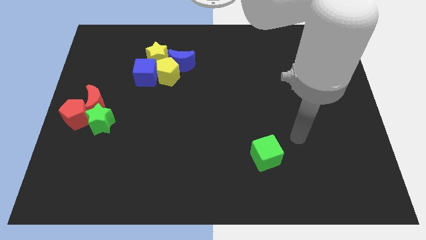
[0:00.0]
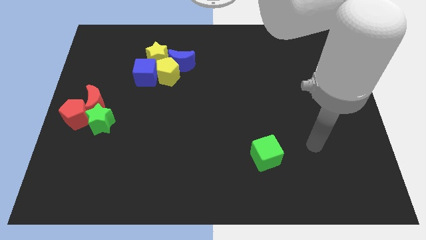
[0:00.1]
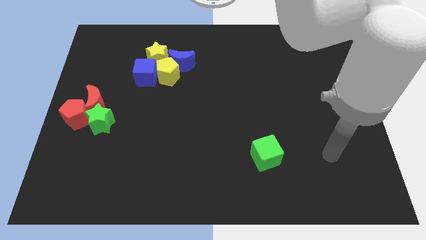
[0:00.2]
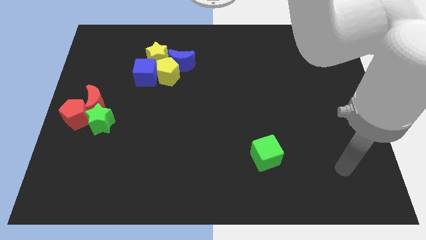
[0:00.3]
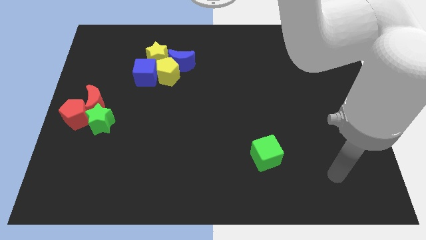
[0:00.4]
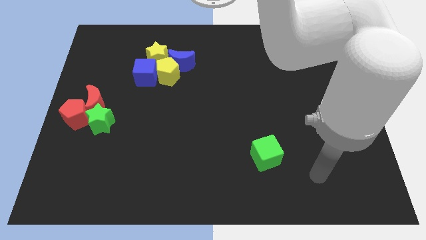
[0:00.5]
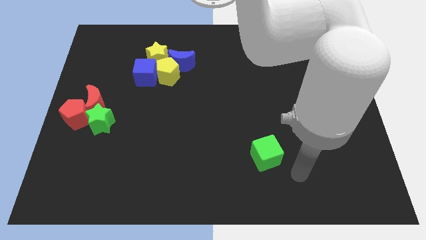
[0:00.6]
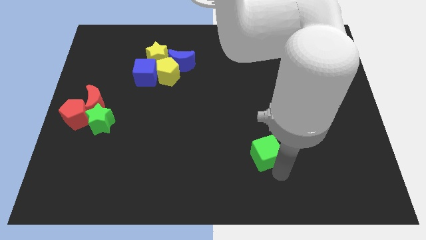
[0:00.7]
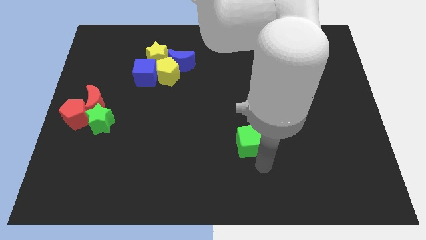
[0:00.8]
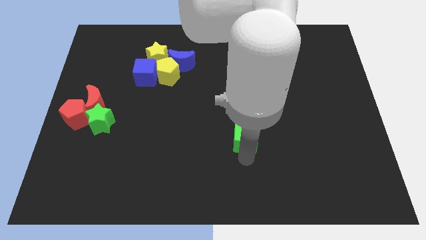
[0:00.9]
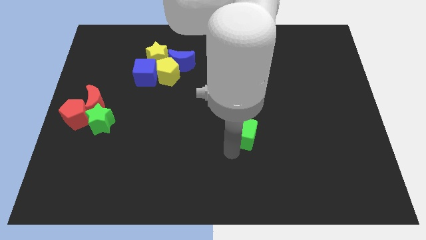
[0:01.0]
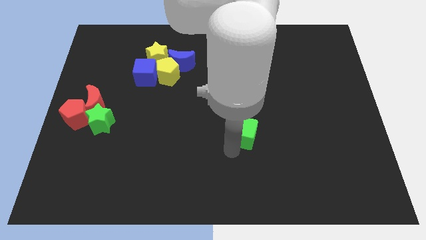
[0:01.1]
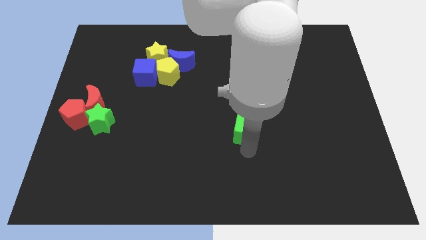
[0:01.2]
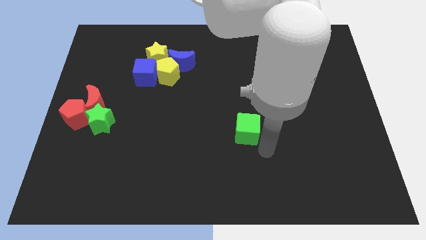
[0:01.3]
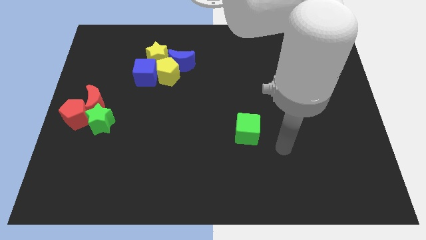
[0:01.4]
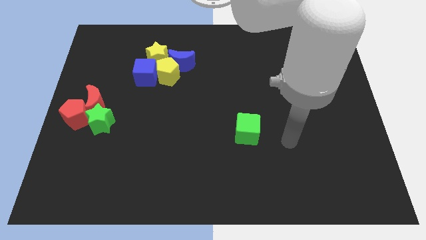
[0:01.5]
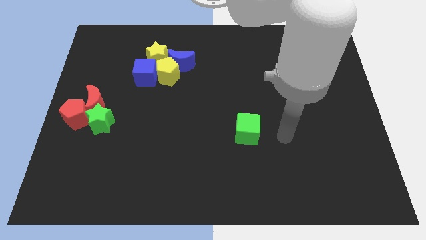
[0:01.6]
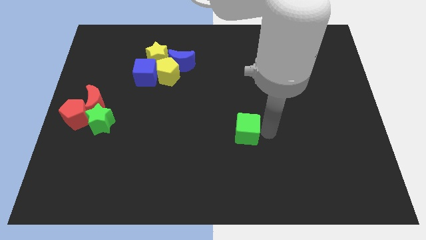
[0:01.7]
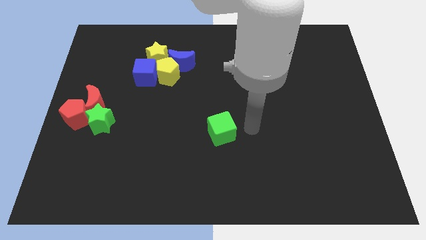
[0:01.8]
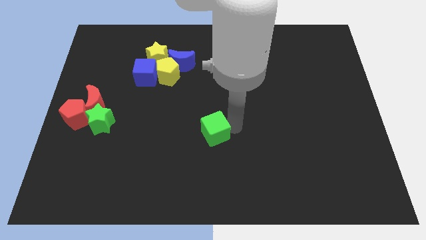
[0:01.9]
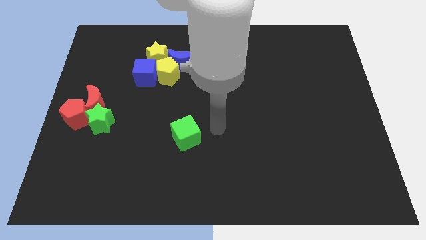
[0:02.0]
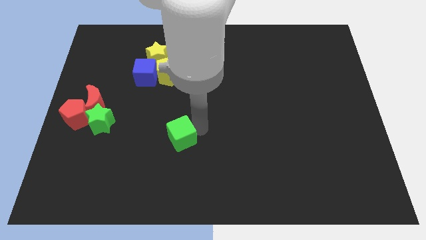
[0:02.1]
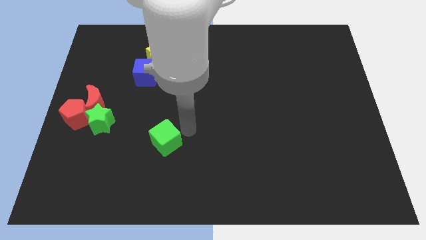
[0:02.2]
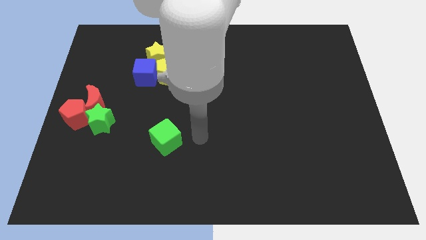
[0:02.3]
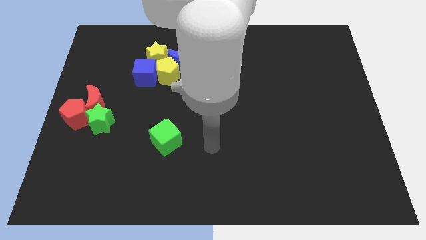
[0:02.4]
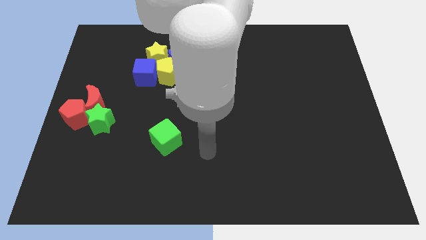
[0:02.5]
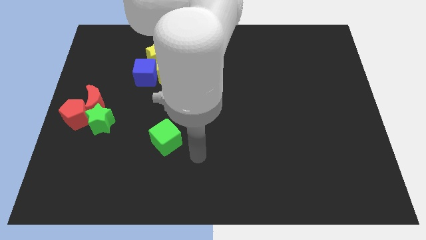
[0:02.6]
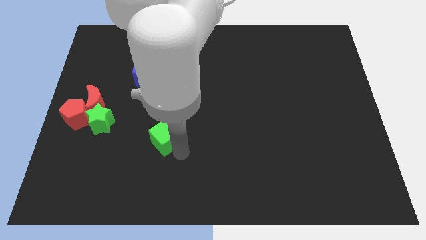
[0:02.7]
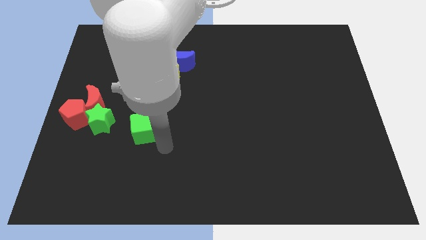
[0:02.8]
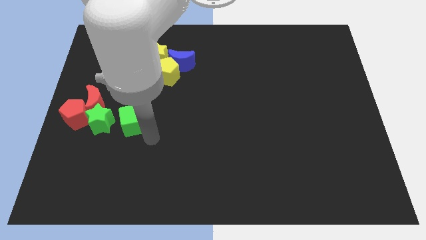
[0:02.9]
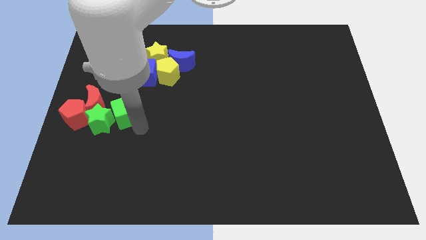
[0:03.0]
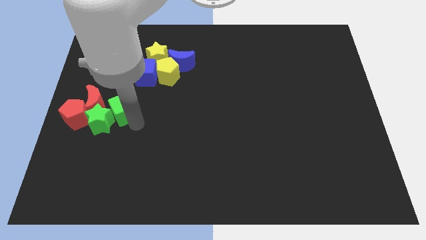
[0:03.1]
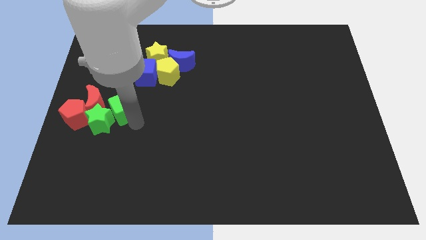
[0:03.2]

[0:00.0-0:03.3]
move the green cube towards the green star

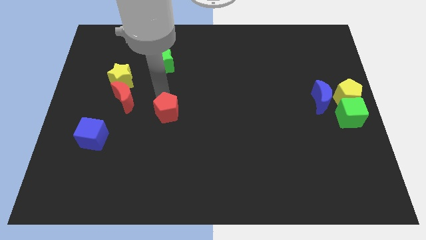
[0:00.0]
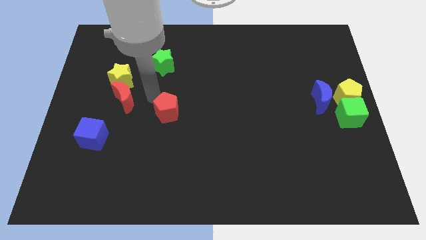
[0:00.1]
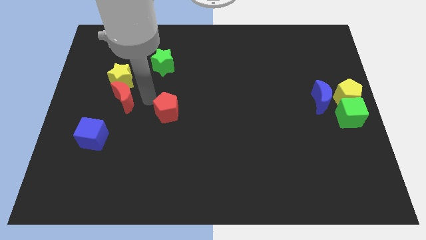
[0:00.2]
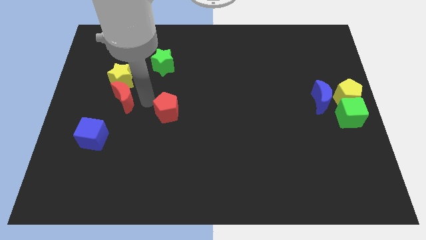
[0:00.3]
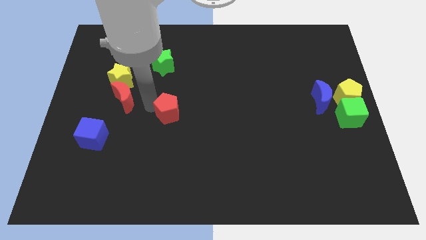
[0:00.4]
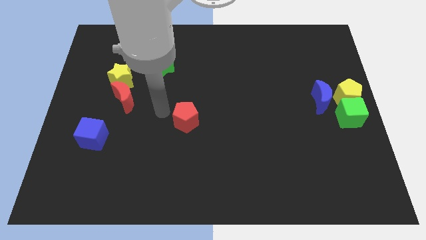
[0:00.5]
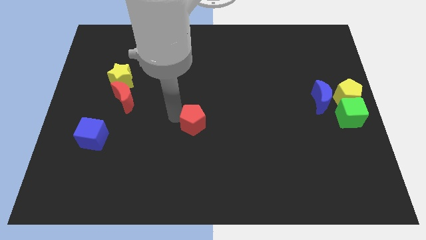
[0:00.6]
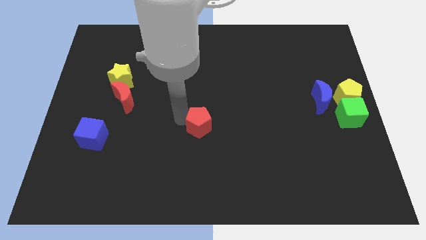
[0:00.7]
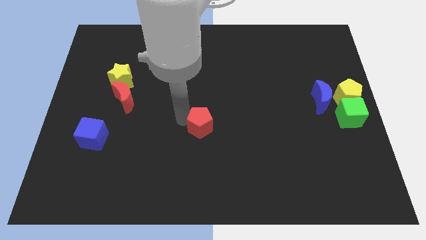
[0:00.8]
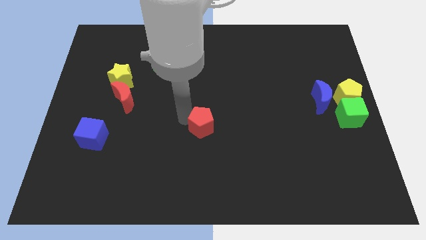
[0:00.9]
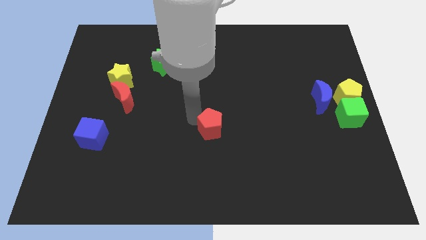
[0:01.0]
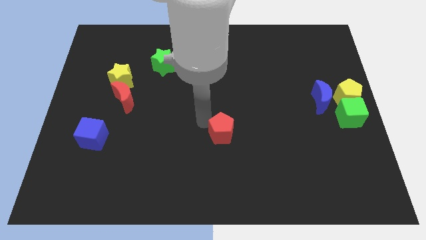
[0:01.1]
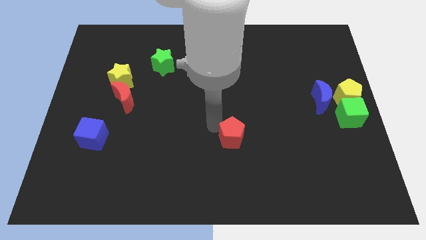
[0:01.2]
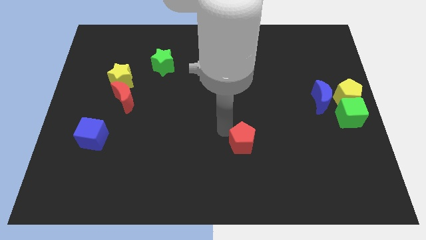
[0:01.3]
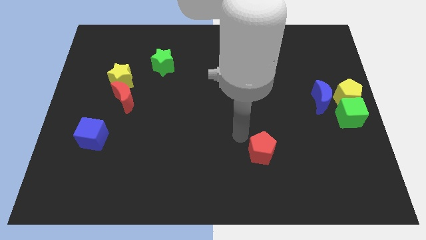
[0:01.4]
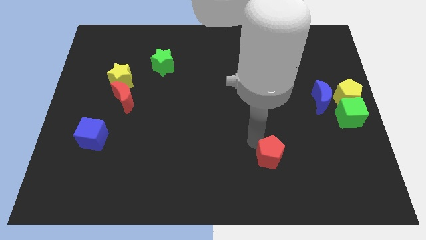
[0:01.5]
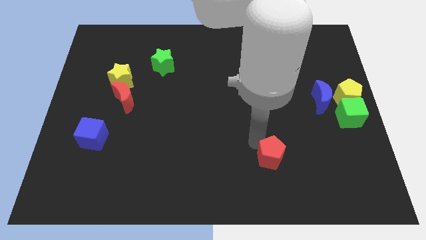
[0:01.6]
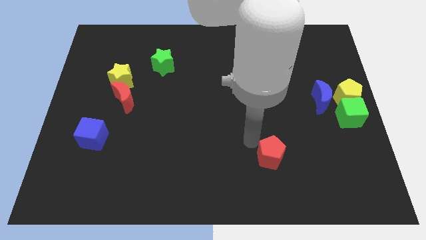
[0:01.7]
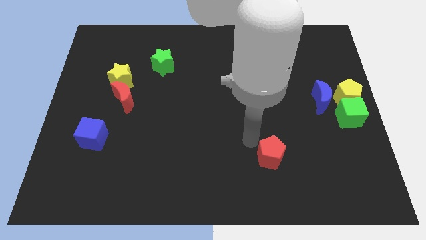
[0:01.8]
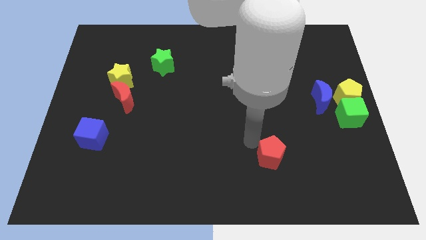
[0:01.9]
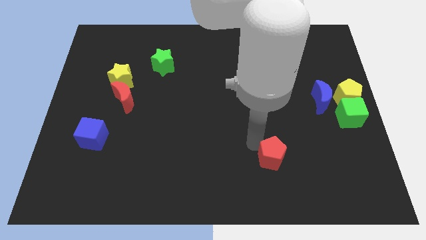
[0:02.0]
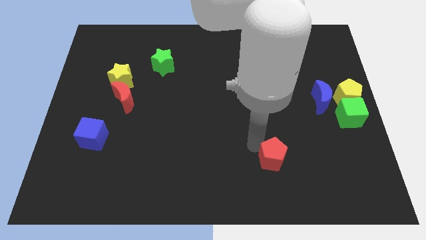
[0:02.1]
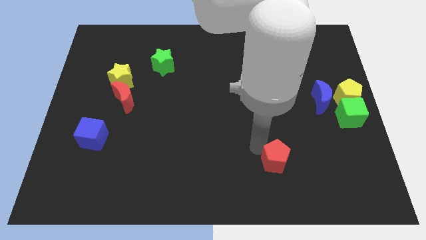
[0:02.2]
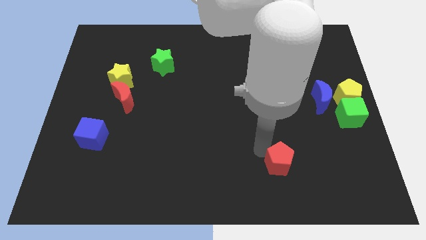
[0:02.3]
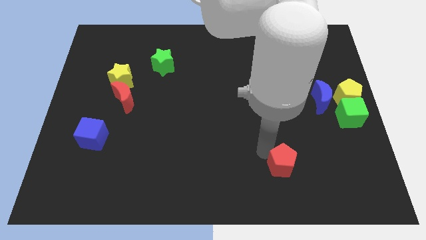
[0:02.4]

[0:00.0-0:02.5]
push the red pentagon downwards of the board

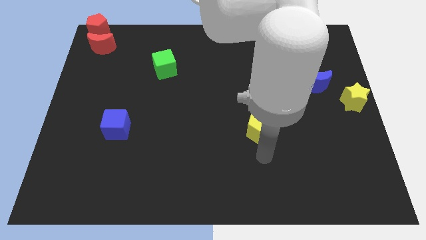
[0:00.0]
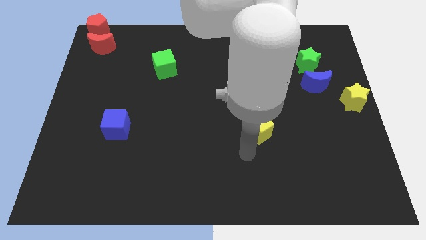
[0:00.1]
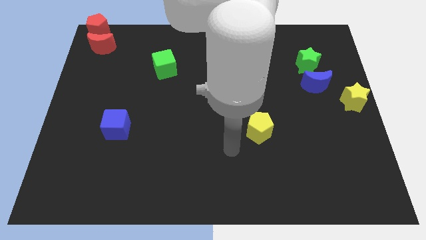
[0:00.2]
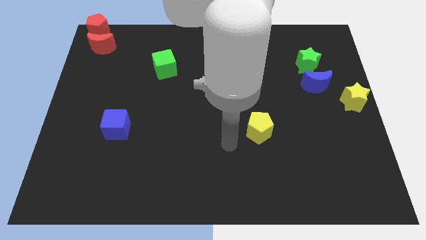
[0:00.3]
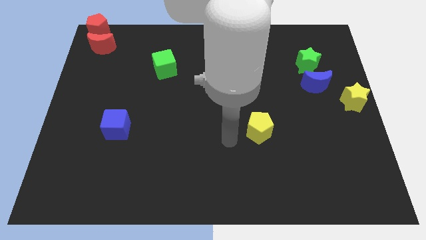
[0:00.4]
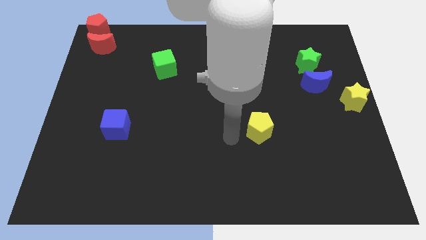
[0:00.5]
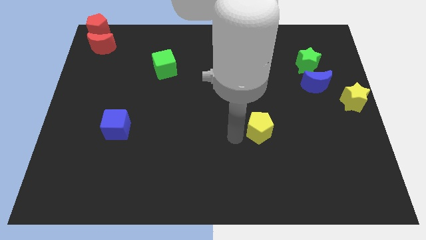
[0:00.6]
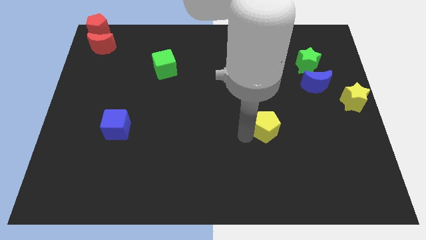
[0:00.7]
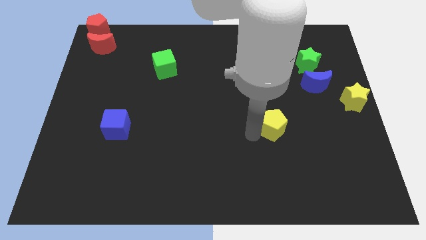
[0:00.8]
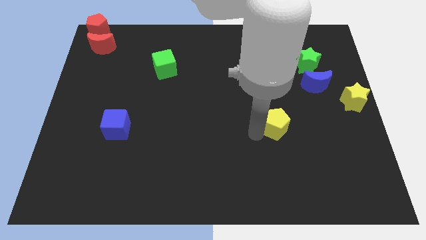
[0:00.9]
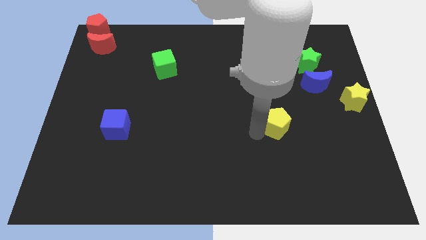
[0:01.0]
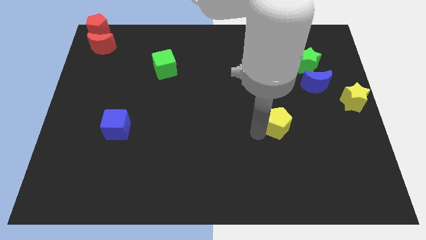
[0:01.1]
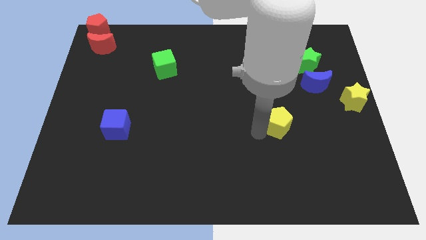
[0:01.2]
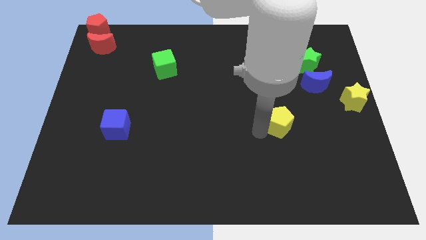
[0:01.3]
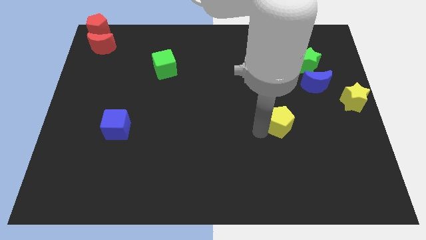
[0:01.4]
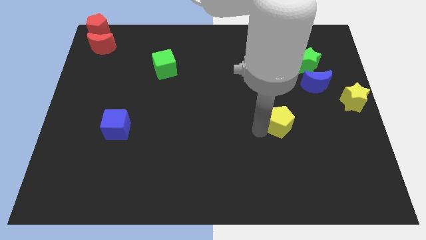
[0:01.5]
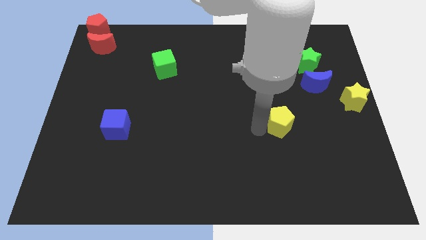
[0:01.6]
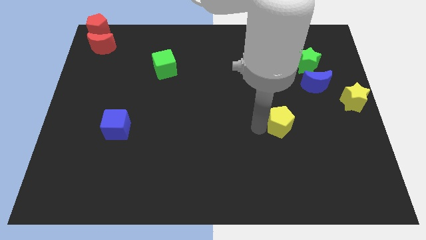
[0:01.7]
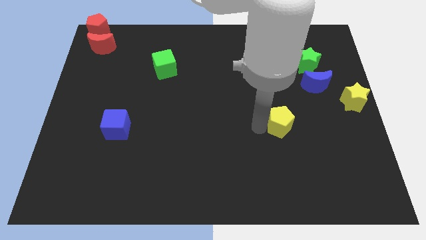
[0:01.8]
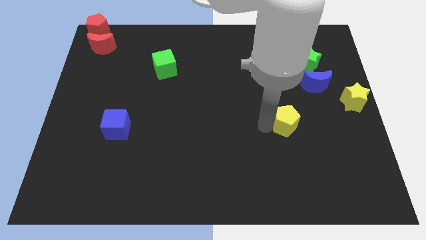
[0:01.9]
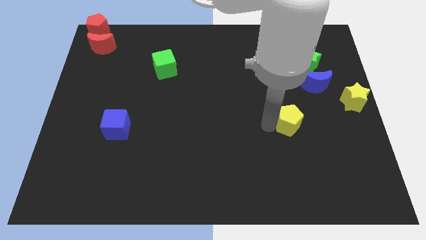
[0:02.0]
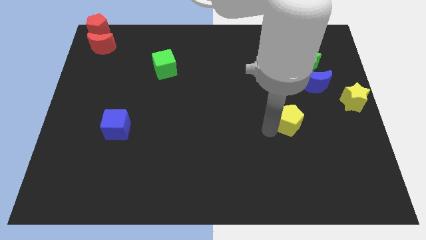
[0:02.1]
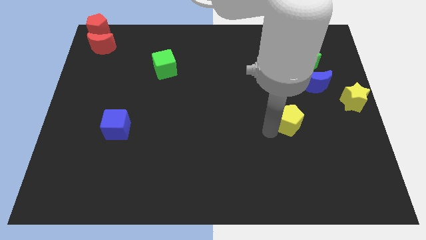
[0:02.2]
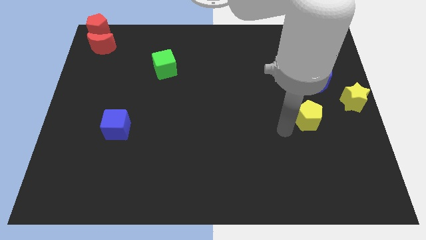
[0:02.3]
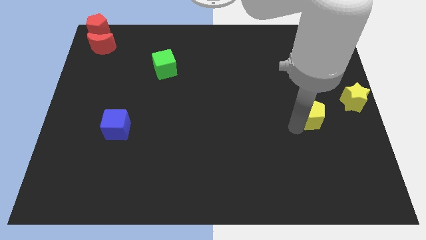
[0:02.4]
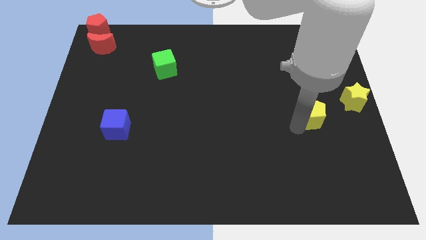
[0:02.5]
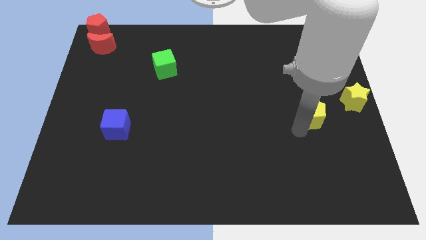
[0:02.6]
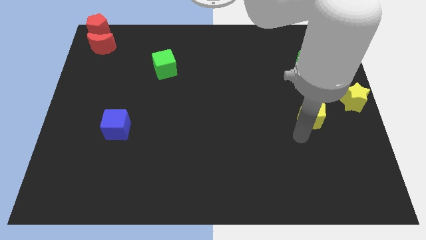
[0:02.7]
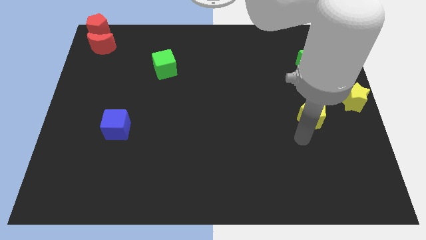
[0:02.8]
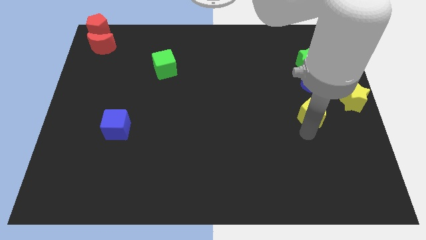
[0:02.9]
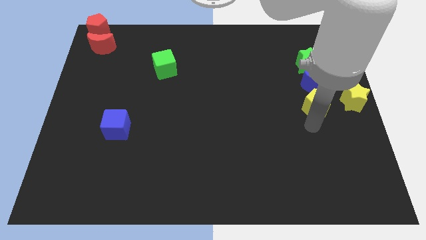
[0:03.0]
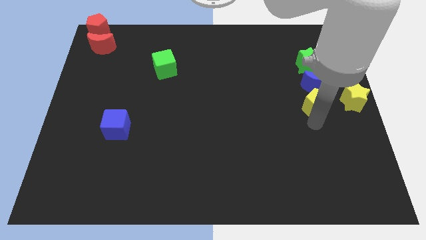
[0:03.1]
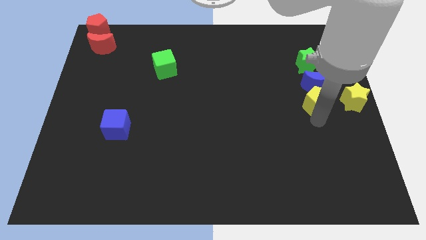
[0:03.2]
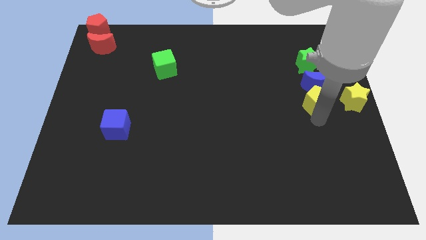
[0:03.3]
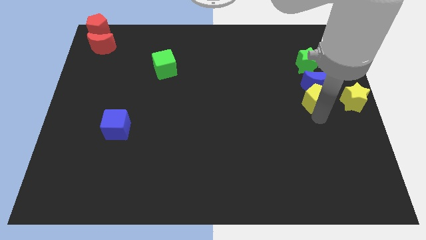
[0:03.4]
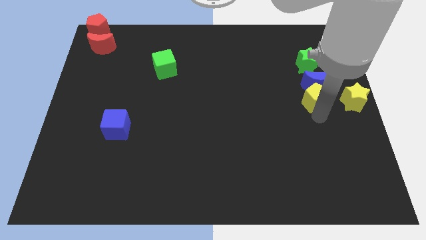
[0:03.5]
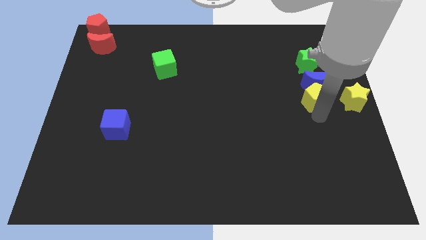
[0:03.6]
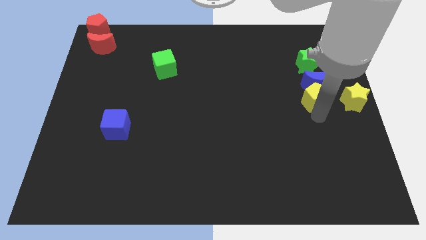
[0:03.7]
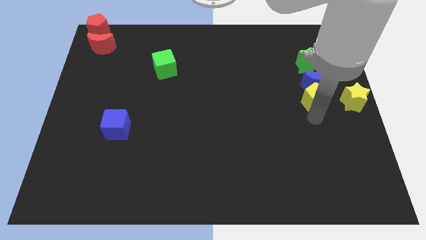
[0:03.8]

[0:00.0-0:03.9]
place yellow pentagon at the bottom of blue moon
